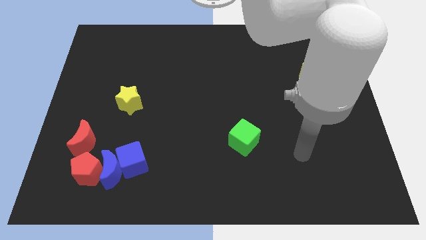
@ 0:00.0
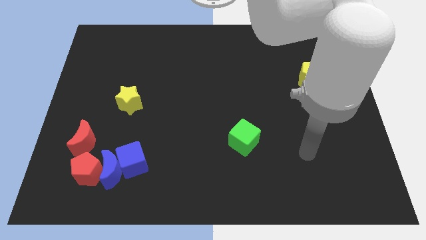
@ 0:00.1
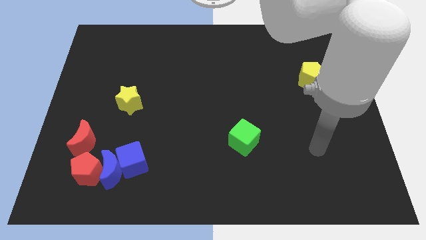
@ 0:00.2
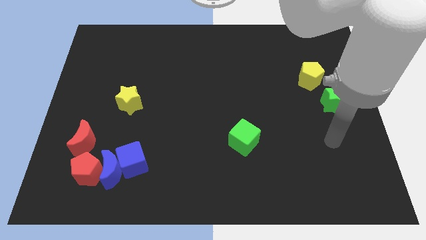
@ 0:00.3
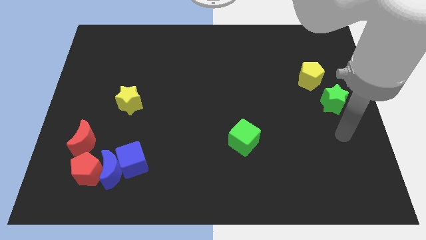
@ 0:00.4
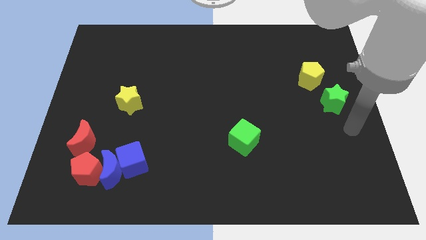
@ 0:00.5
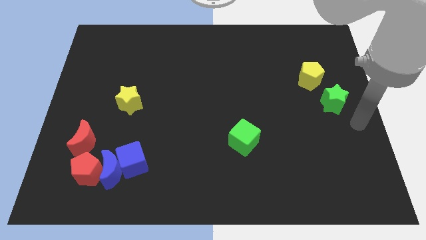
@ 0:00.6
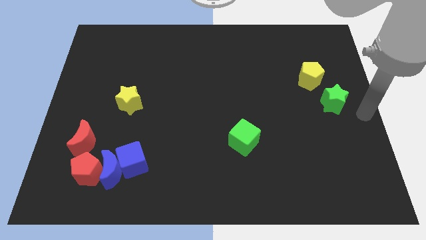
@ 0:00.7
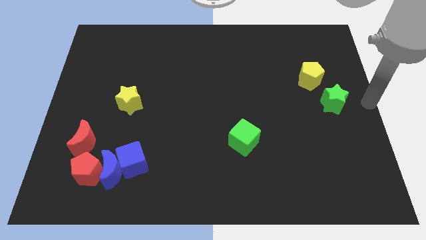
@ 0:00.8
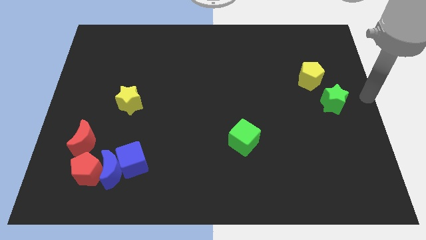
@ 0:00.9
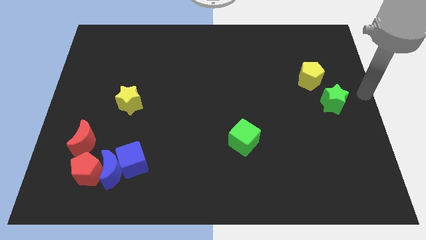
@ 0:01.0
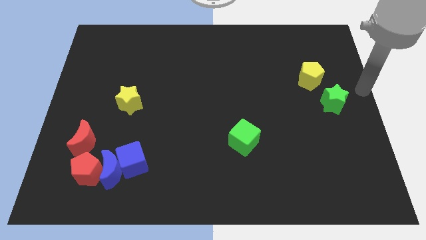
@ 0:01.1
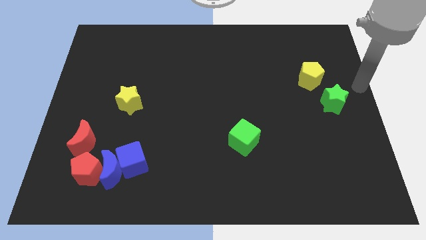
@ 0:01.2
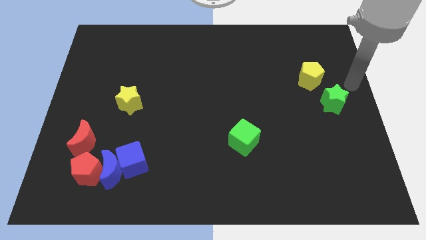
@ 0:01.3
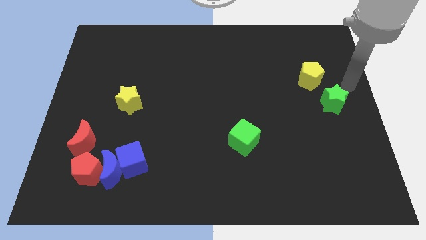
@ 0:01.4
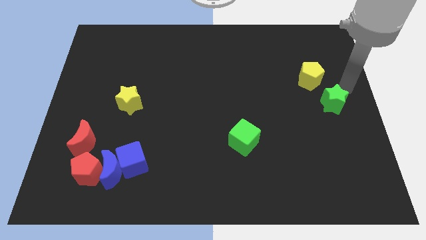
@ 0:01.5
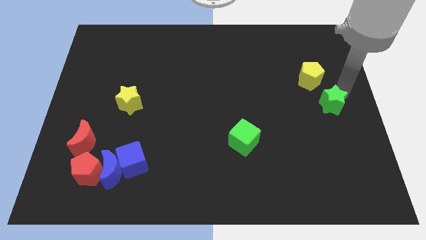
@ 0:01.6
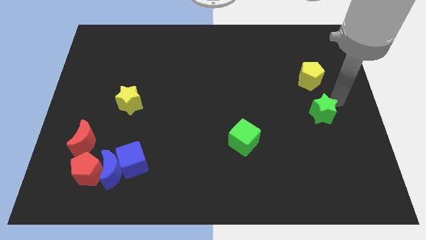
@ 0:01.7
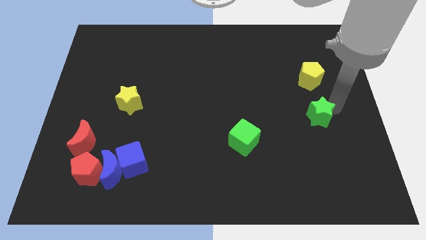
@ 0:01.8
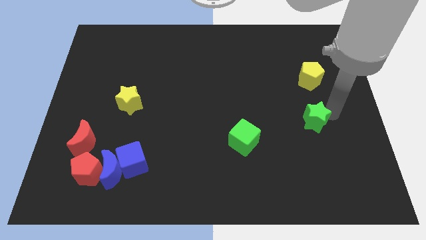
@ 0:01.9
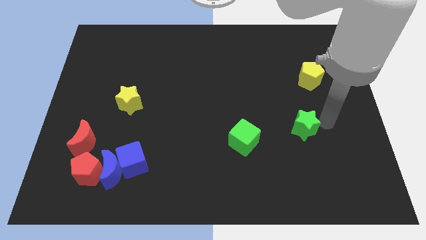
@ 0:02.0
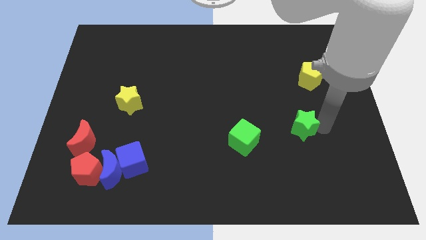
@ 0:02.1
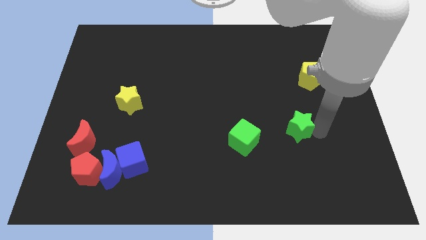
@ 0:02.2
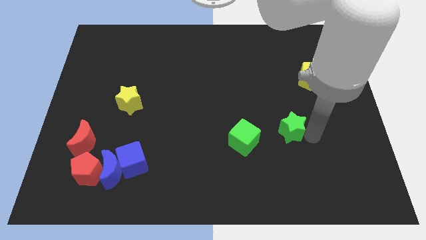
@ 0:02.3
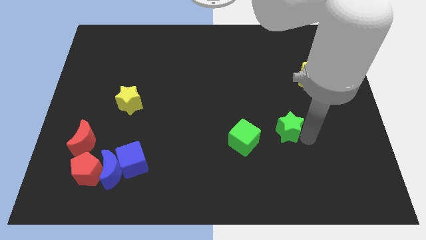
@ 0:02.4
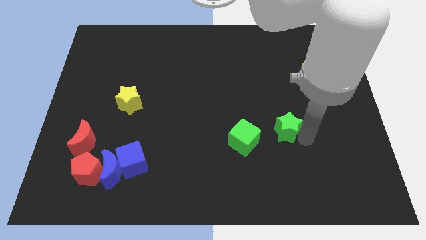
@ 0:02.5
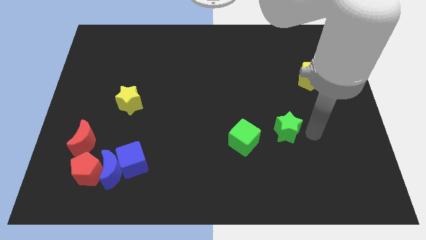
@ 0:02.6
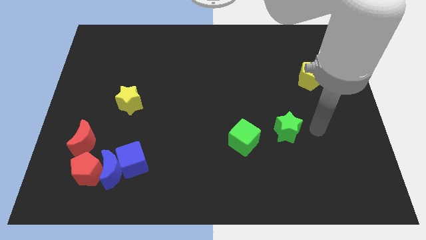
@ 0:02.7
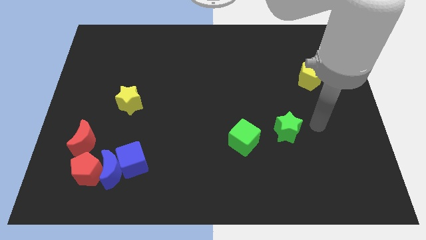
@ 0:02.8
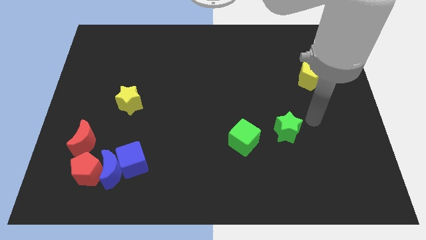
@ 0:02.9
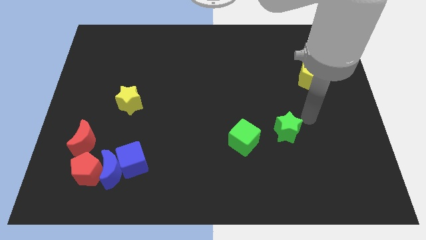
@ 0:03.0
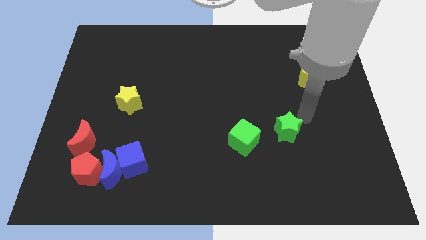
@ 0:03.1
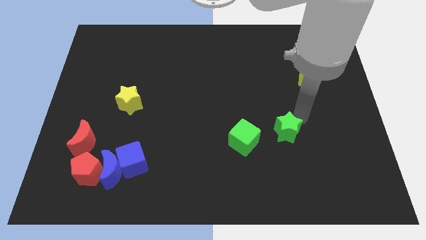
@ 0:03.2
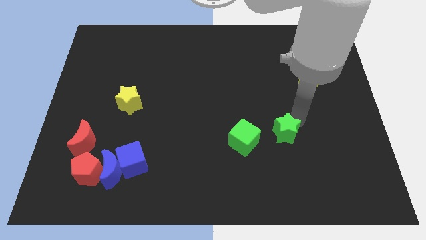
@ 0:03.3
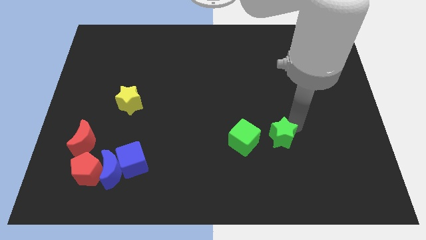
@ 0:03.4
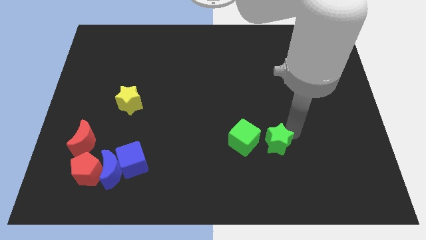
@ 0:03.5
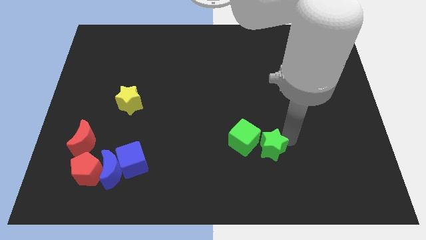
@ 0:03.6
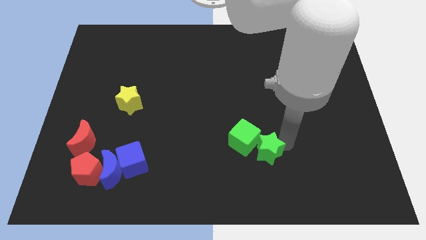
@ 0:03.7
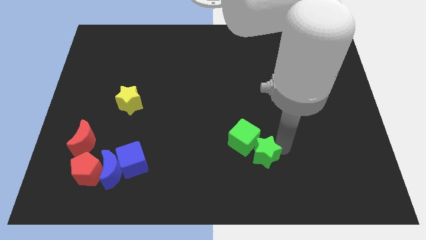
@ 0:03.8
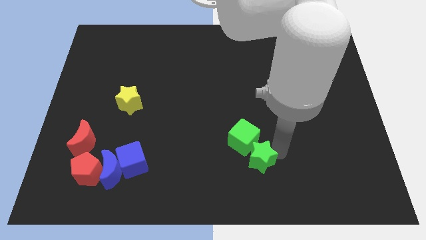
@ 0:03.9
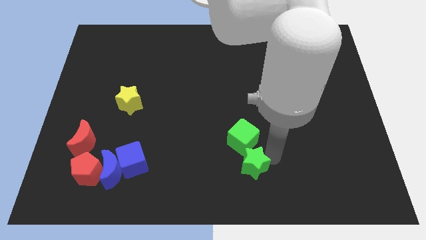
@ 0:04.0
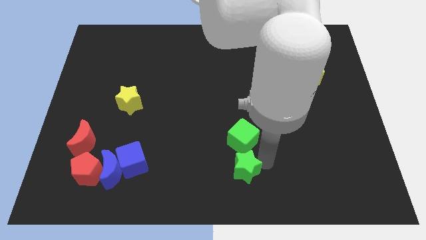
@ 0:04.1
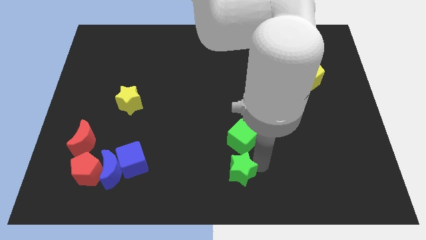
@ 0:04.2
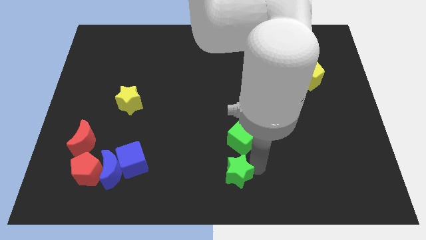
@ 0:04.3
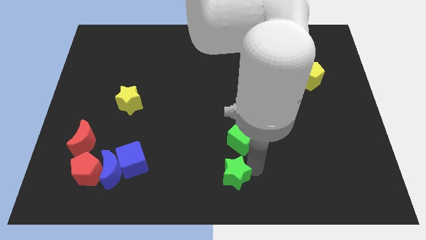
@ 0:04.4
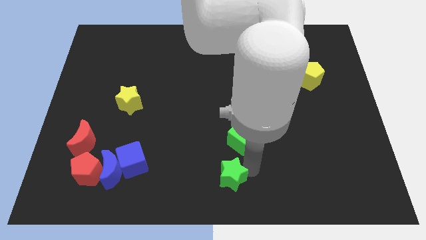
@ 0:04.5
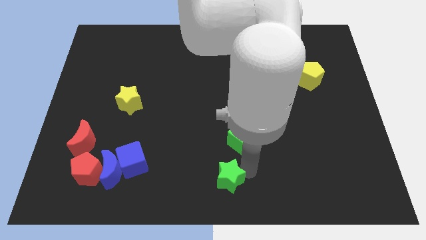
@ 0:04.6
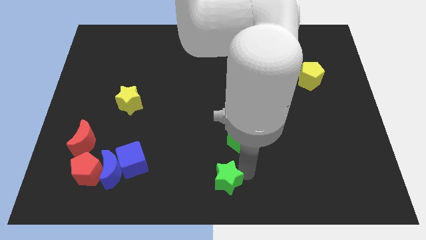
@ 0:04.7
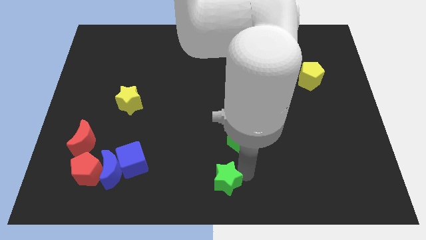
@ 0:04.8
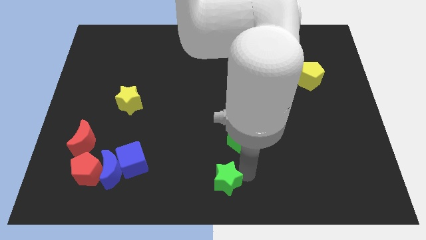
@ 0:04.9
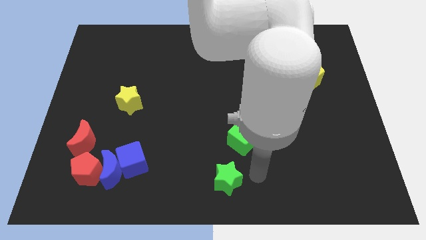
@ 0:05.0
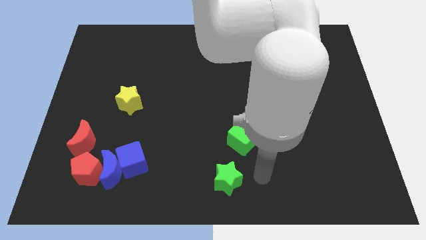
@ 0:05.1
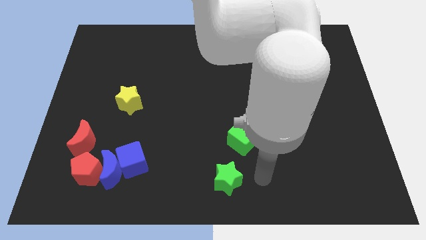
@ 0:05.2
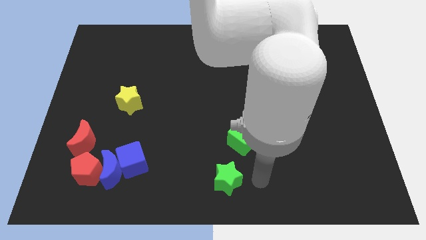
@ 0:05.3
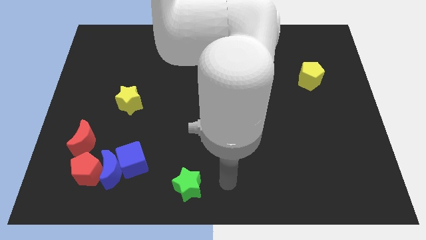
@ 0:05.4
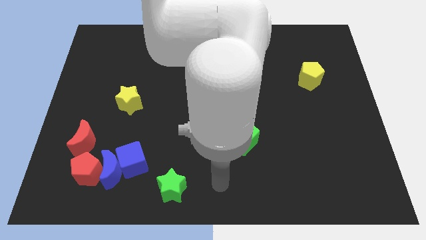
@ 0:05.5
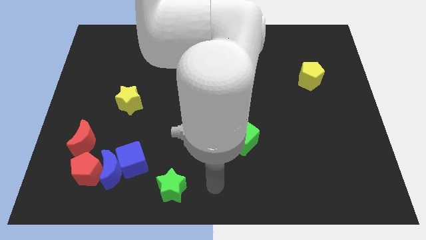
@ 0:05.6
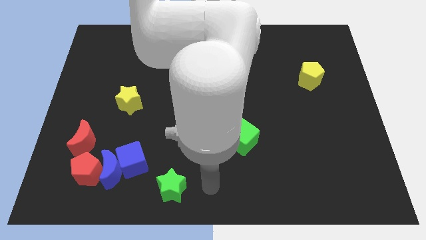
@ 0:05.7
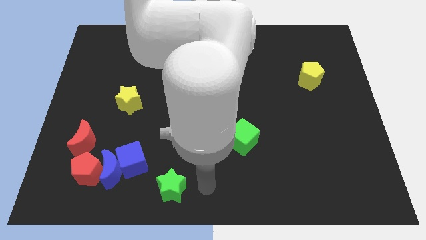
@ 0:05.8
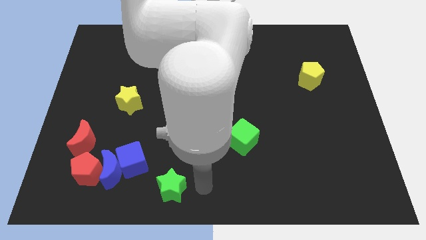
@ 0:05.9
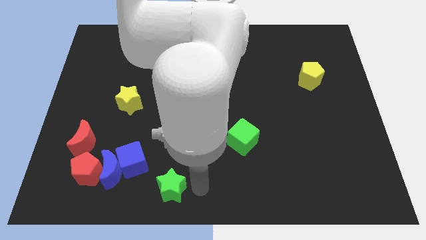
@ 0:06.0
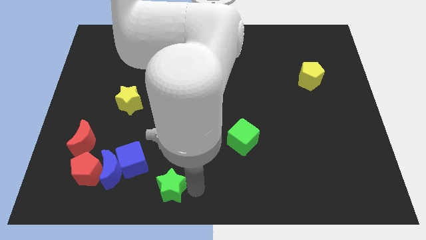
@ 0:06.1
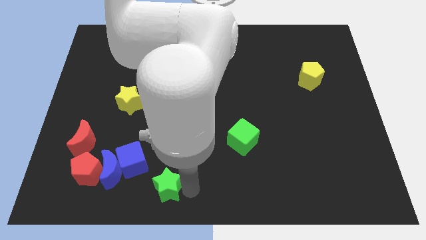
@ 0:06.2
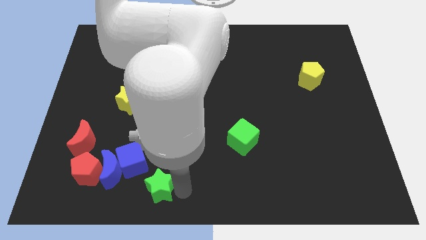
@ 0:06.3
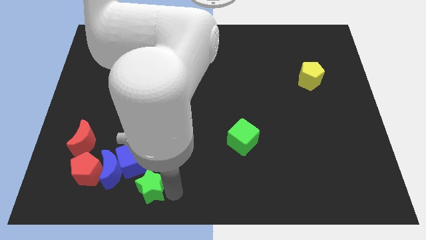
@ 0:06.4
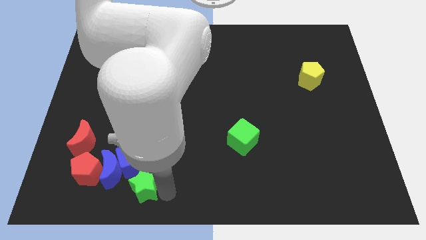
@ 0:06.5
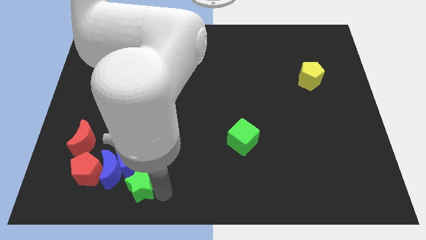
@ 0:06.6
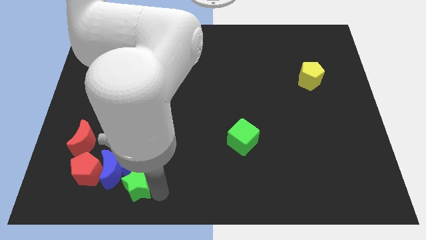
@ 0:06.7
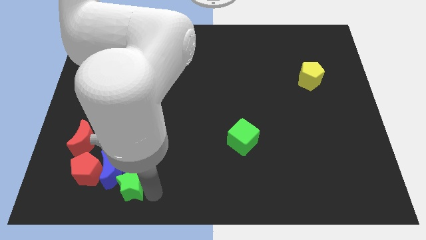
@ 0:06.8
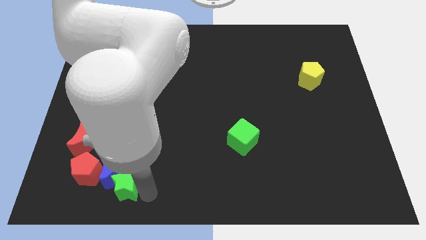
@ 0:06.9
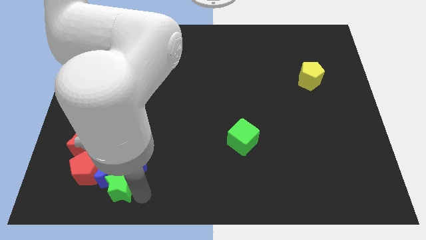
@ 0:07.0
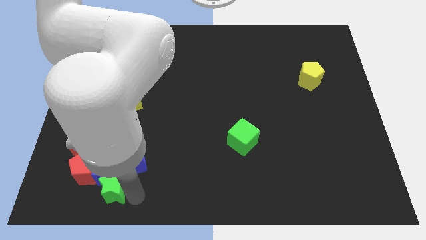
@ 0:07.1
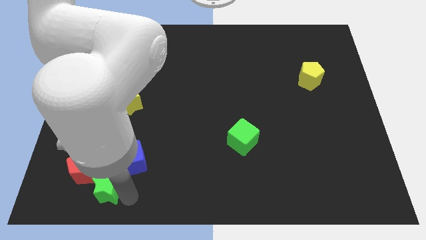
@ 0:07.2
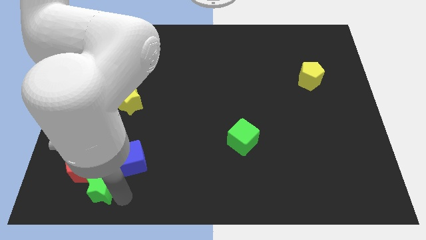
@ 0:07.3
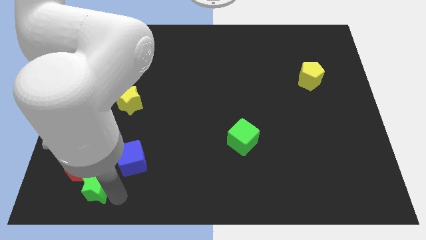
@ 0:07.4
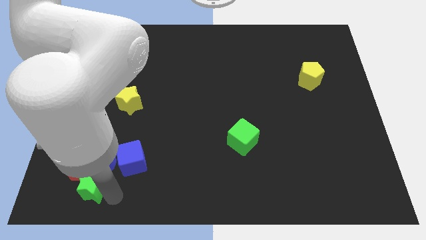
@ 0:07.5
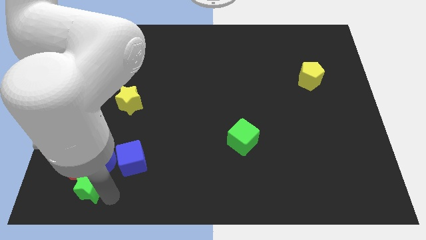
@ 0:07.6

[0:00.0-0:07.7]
push the green star towards the red pentagon

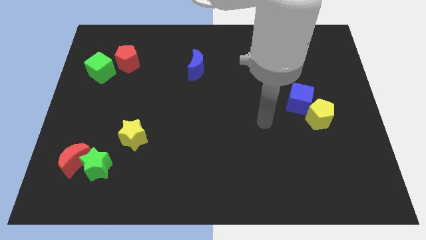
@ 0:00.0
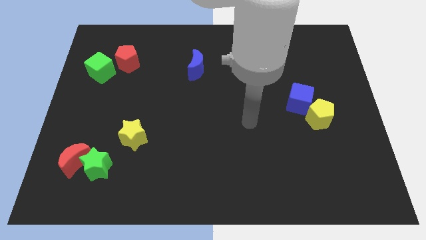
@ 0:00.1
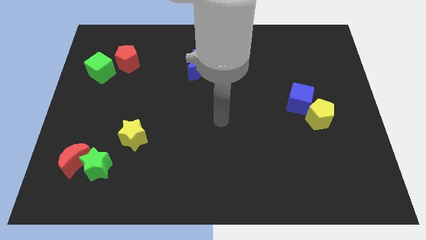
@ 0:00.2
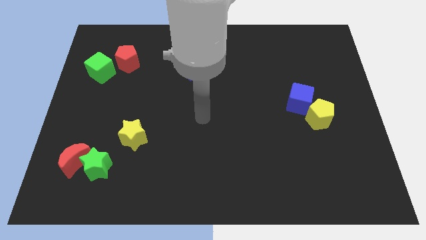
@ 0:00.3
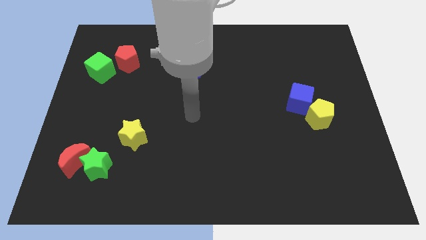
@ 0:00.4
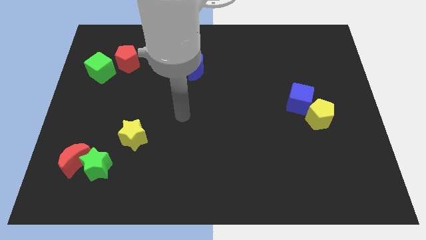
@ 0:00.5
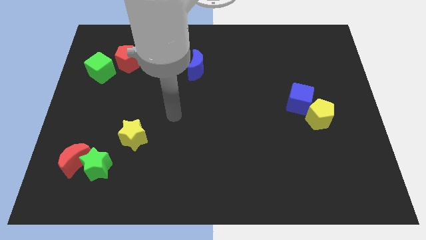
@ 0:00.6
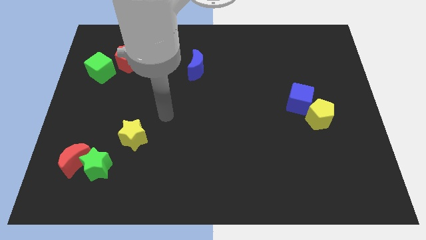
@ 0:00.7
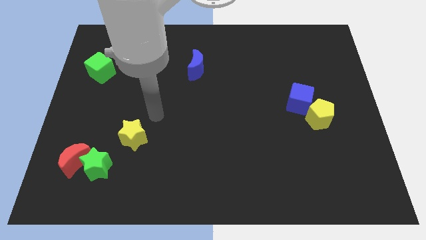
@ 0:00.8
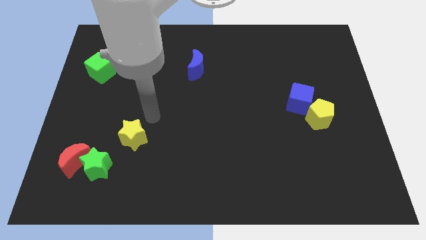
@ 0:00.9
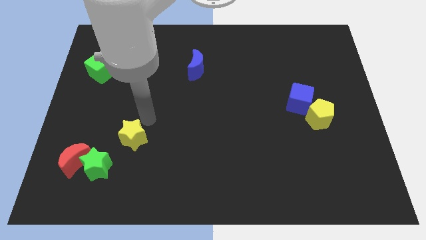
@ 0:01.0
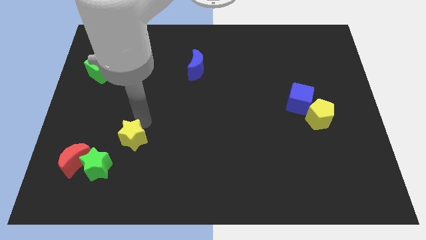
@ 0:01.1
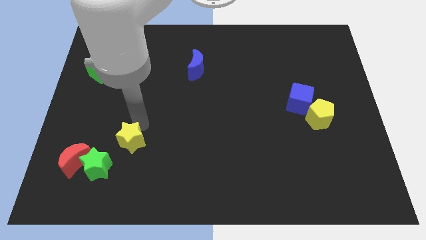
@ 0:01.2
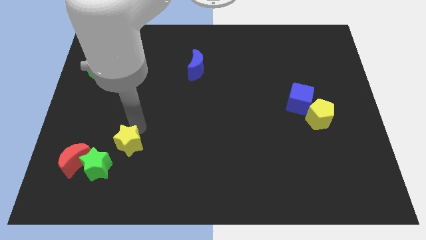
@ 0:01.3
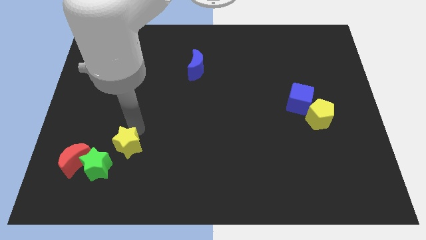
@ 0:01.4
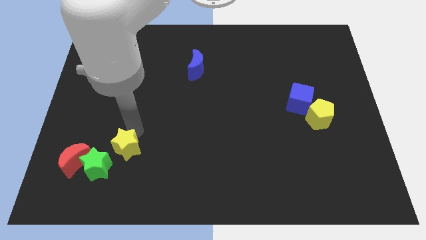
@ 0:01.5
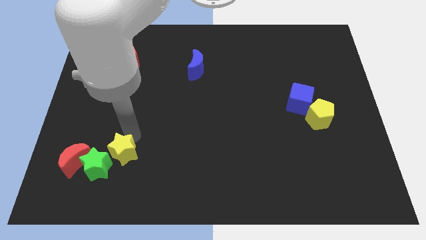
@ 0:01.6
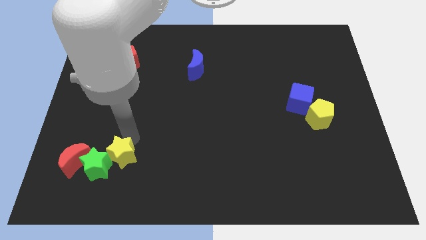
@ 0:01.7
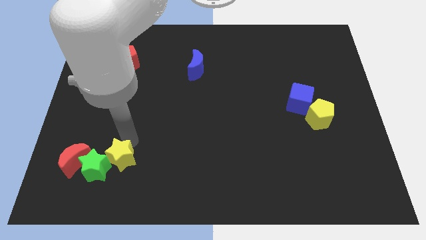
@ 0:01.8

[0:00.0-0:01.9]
put the yellow star close to the green star
